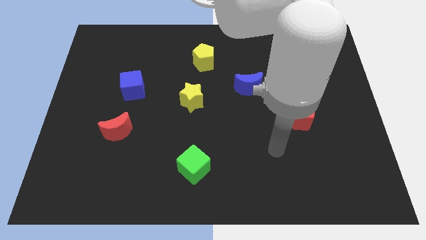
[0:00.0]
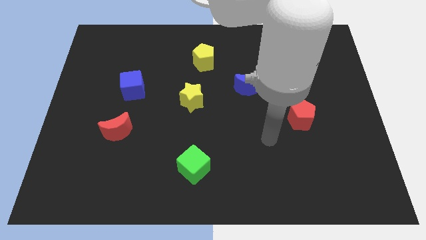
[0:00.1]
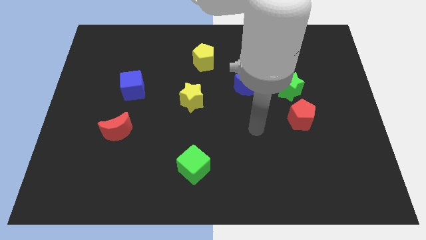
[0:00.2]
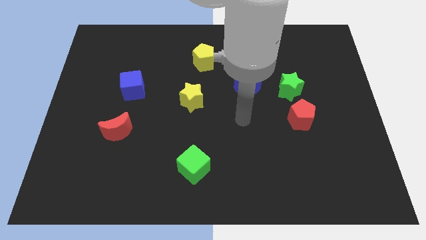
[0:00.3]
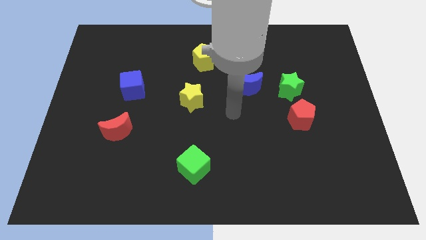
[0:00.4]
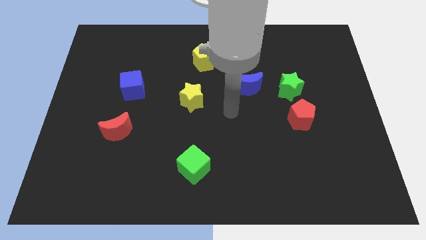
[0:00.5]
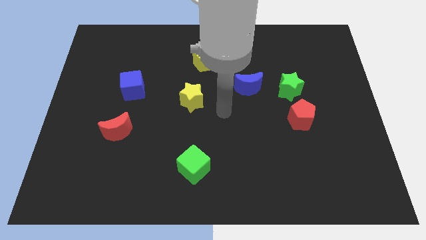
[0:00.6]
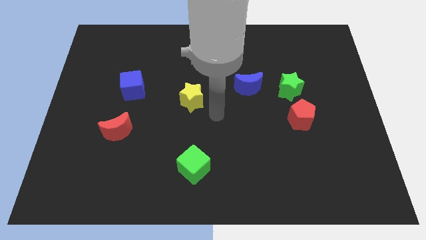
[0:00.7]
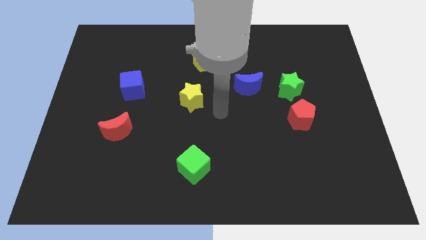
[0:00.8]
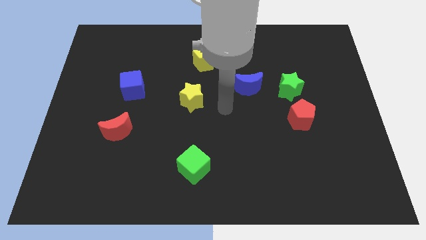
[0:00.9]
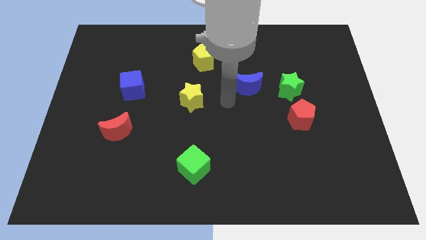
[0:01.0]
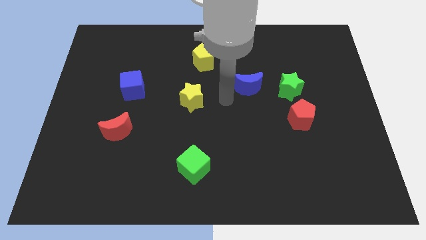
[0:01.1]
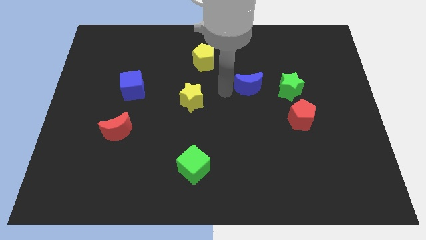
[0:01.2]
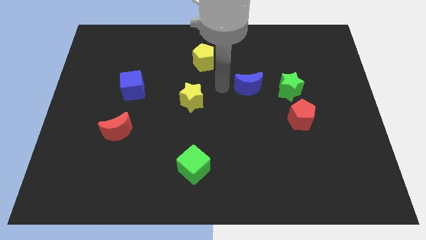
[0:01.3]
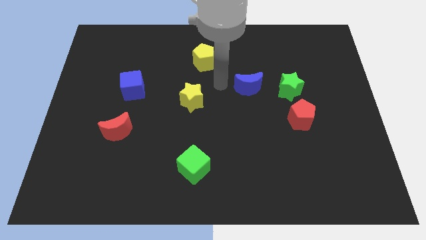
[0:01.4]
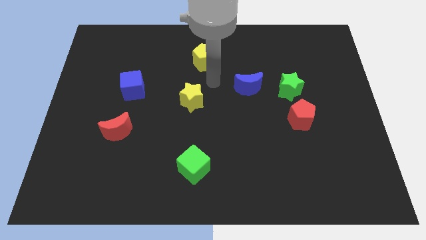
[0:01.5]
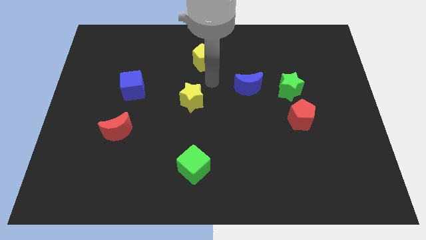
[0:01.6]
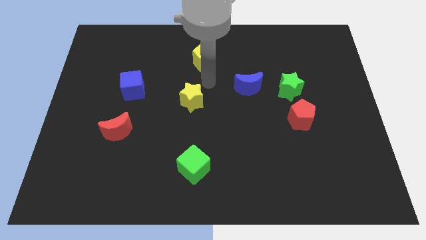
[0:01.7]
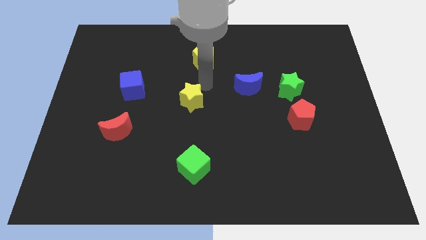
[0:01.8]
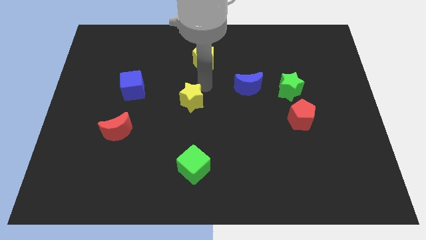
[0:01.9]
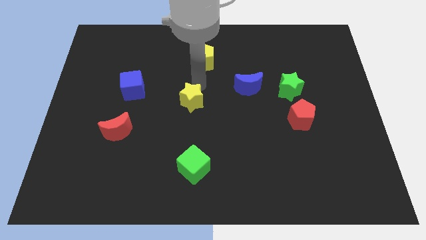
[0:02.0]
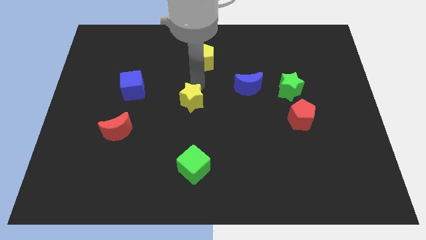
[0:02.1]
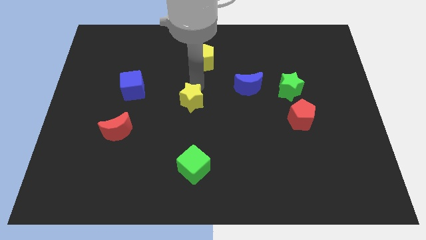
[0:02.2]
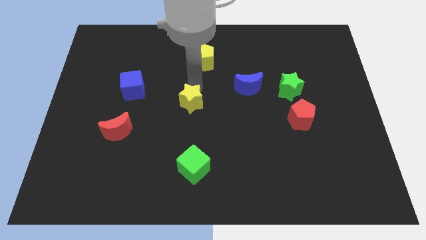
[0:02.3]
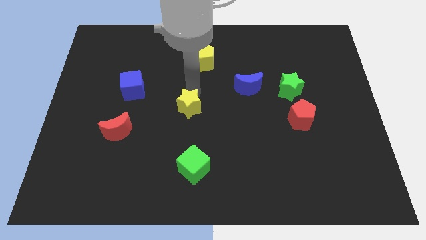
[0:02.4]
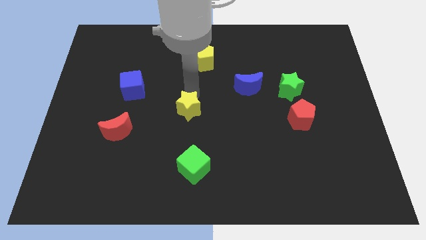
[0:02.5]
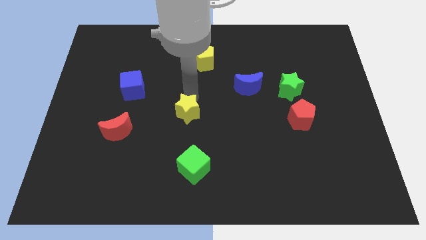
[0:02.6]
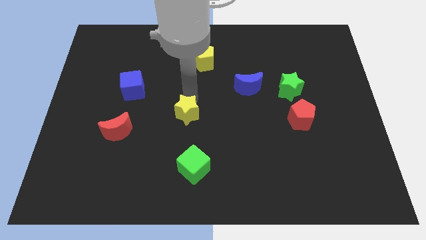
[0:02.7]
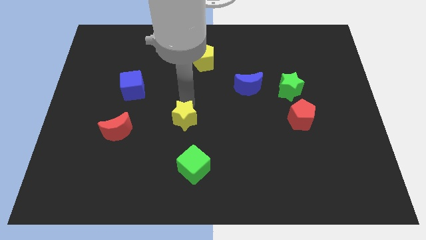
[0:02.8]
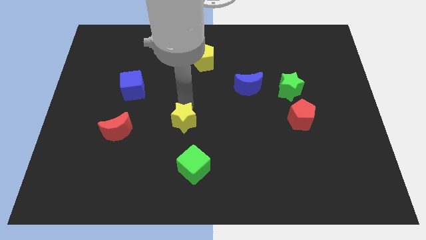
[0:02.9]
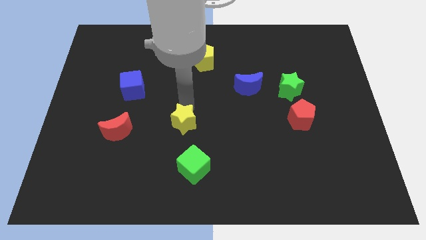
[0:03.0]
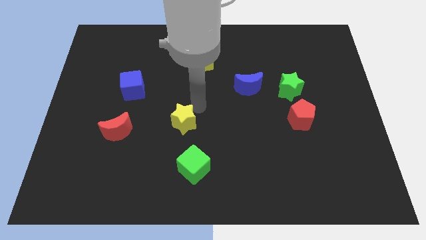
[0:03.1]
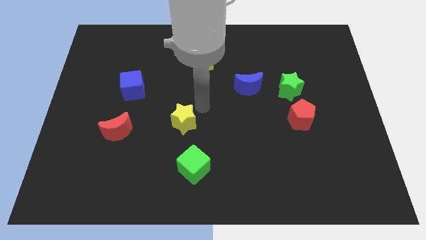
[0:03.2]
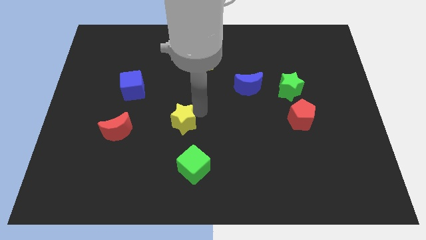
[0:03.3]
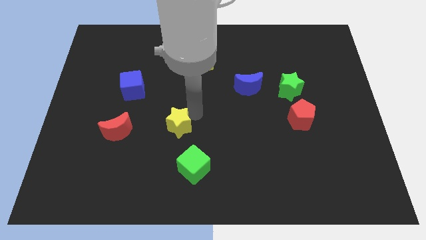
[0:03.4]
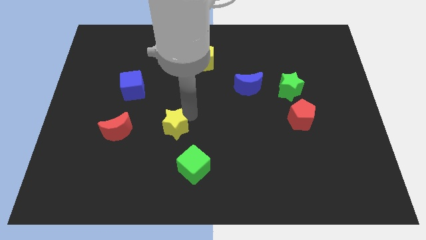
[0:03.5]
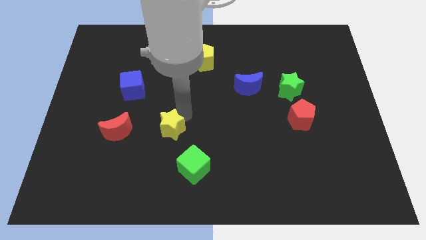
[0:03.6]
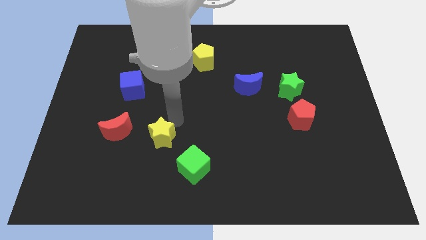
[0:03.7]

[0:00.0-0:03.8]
push the yellow star parallel to the red crescent

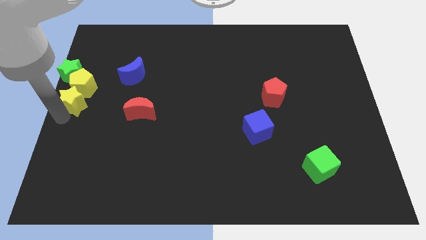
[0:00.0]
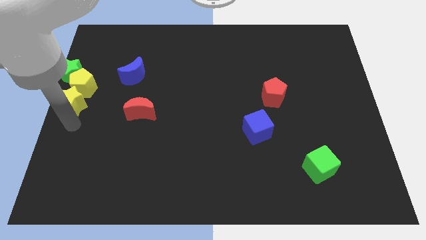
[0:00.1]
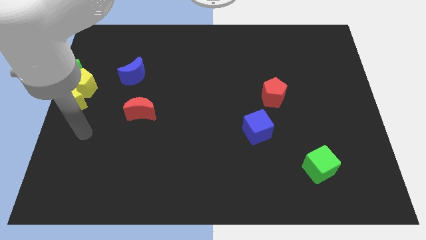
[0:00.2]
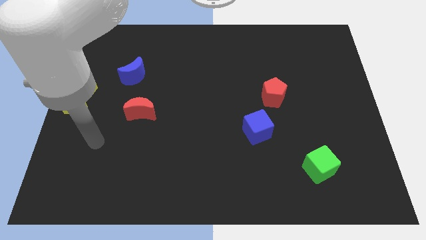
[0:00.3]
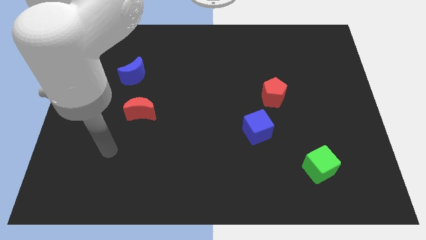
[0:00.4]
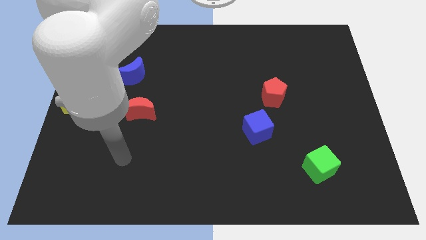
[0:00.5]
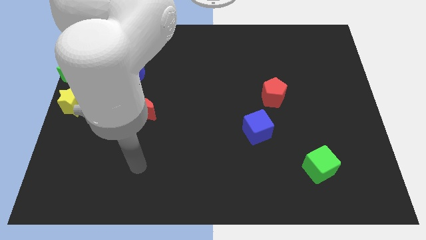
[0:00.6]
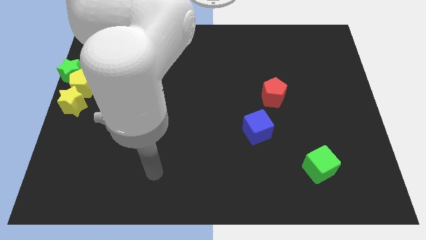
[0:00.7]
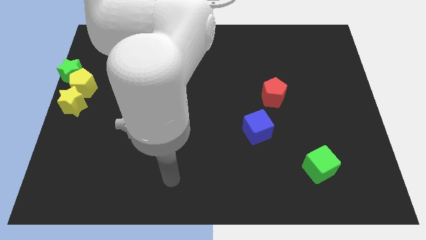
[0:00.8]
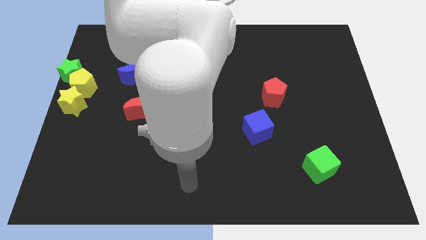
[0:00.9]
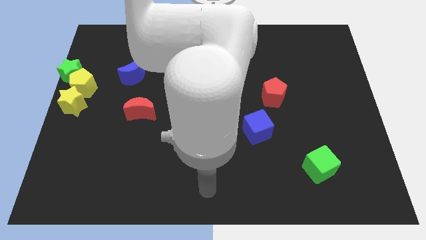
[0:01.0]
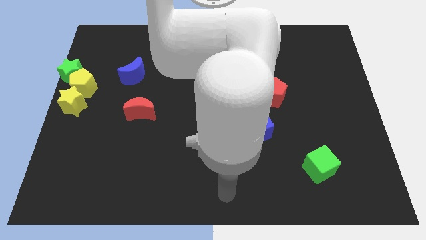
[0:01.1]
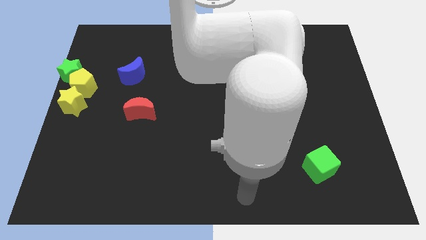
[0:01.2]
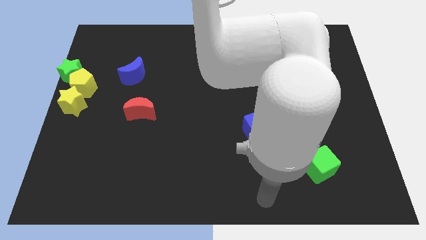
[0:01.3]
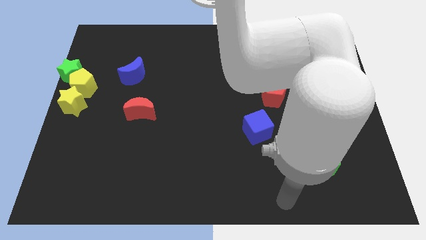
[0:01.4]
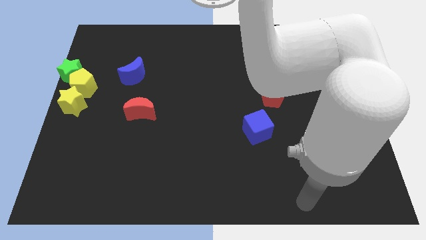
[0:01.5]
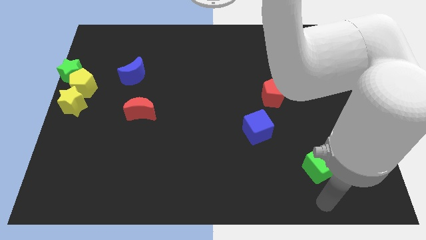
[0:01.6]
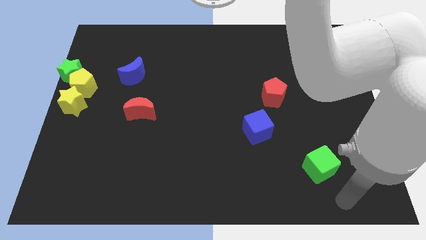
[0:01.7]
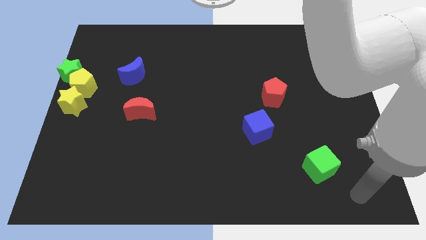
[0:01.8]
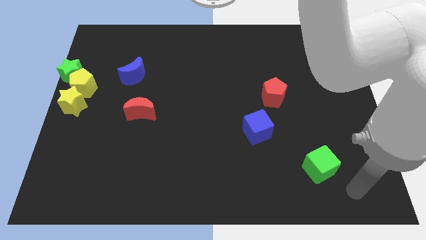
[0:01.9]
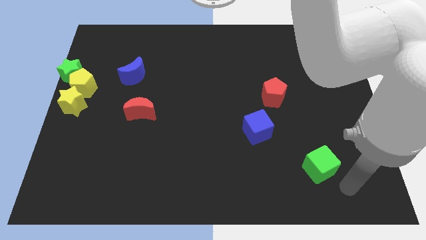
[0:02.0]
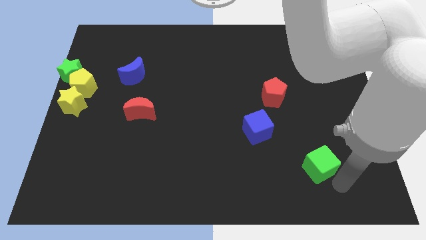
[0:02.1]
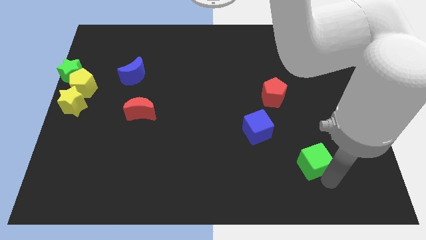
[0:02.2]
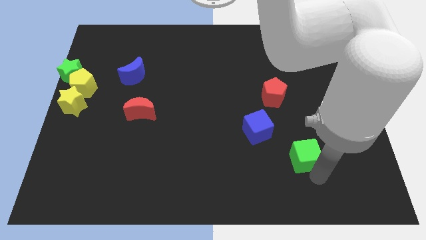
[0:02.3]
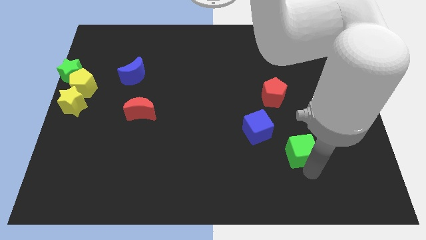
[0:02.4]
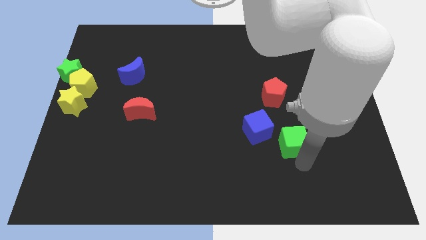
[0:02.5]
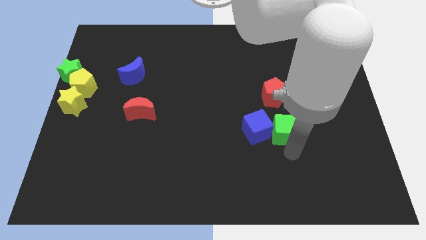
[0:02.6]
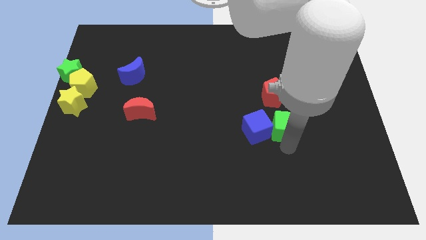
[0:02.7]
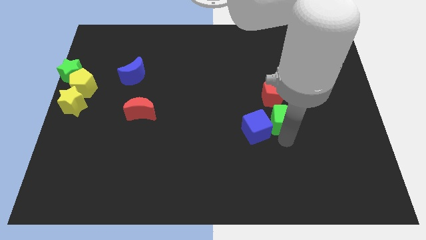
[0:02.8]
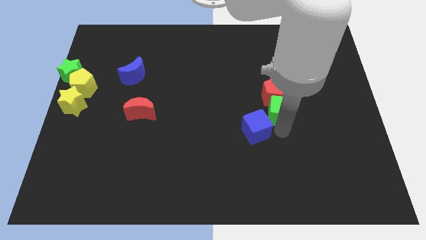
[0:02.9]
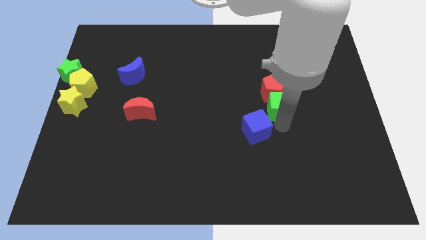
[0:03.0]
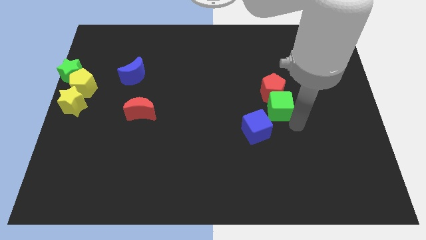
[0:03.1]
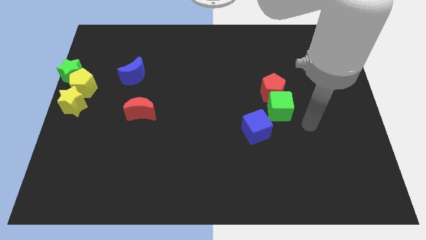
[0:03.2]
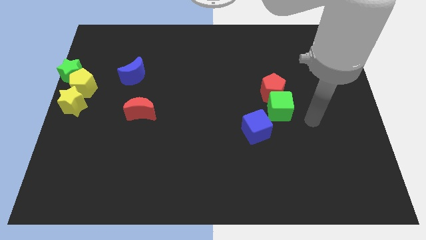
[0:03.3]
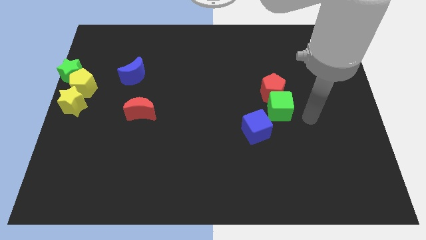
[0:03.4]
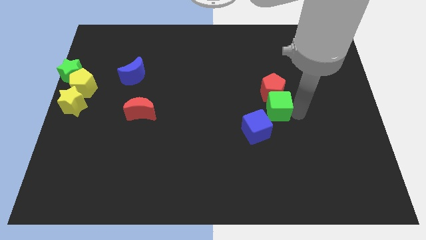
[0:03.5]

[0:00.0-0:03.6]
move green cube below the red pentagon

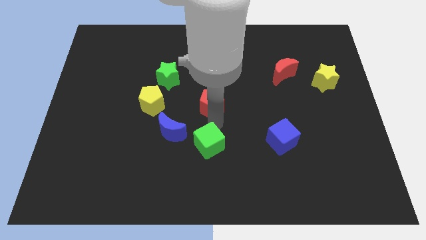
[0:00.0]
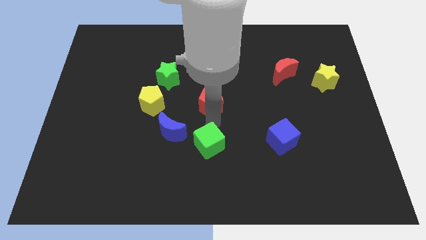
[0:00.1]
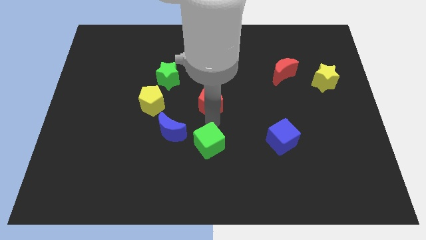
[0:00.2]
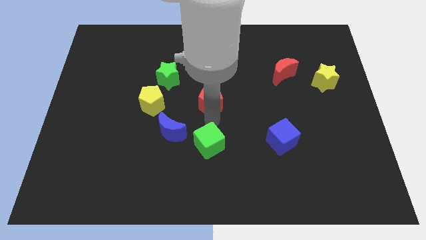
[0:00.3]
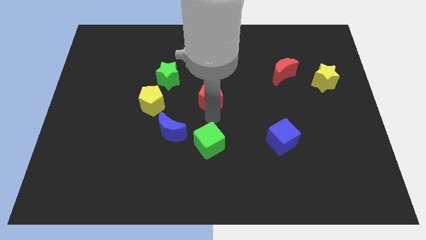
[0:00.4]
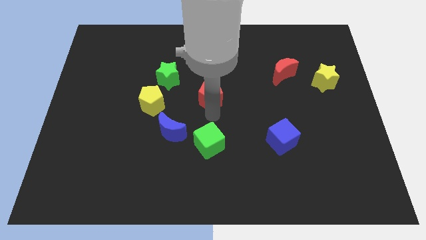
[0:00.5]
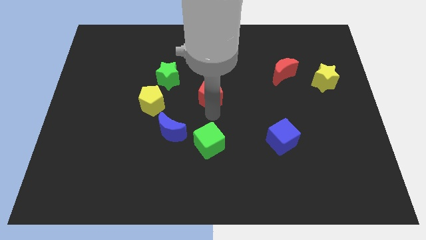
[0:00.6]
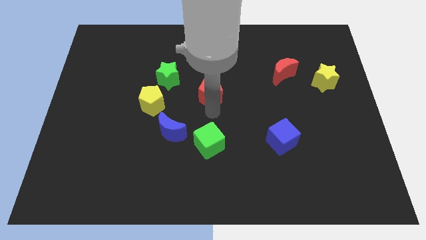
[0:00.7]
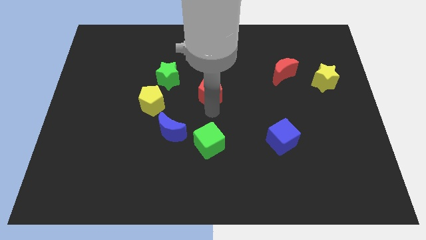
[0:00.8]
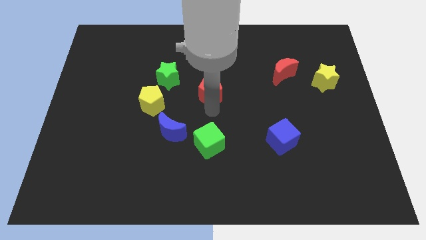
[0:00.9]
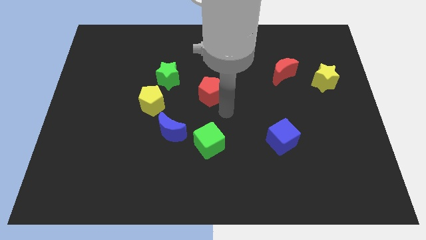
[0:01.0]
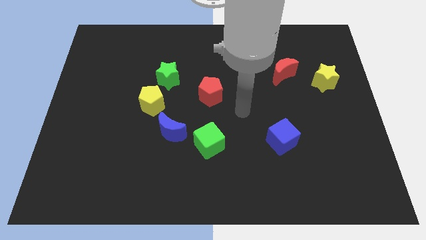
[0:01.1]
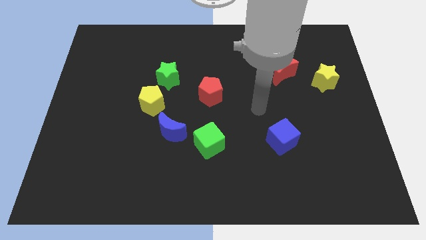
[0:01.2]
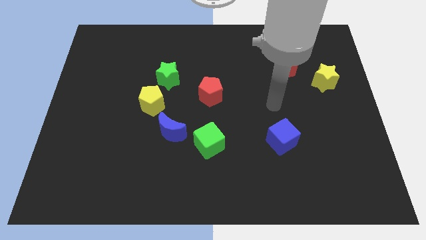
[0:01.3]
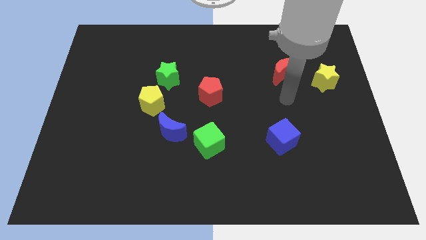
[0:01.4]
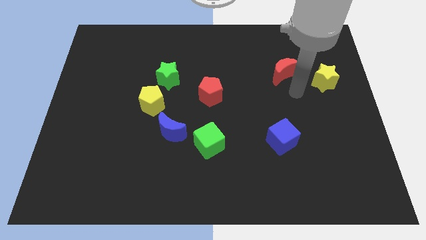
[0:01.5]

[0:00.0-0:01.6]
push the red pentagon slightly to the top

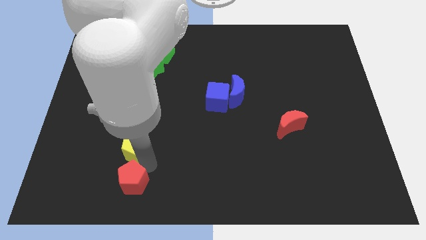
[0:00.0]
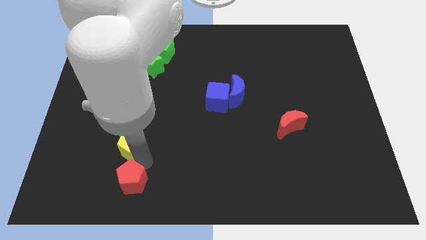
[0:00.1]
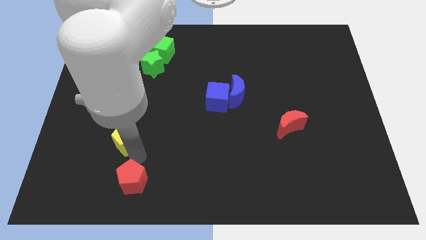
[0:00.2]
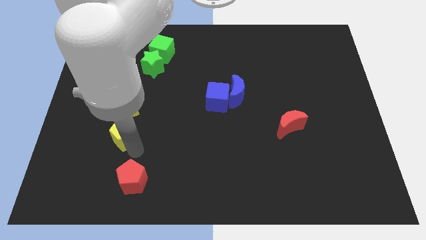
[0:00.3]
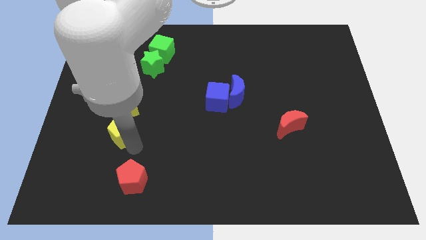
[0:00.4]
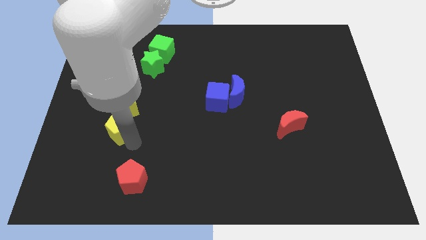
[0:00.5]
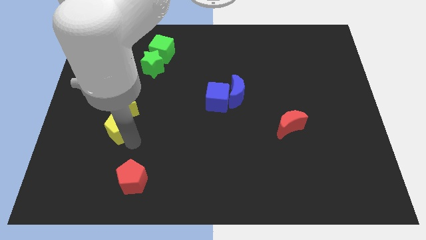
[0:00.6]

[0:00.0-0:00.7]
place the yellow pentagon below the yellow star
